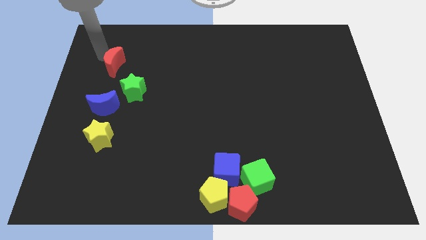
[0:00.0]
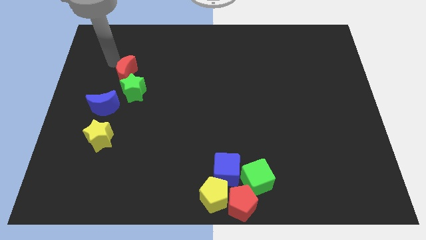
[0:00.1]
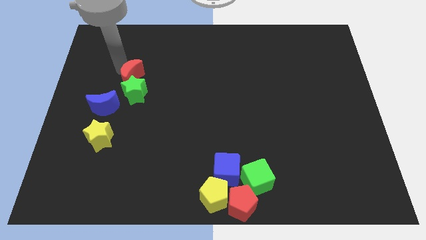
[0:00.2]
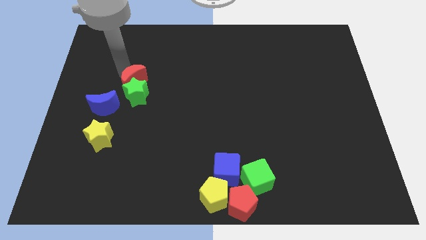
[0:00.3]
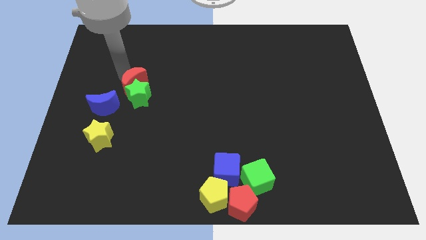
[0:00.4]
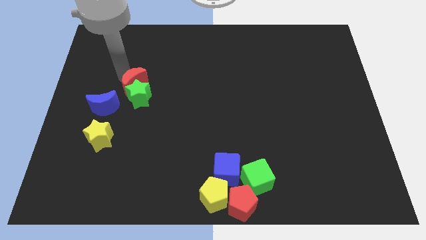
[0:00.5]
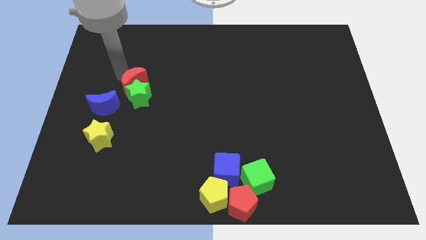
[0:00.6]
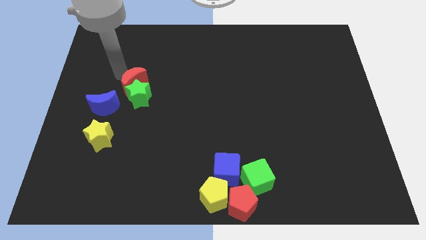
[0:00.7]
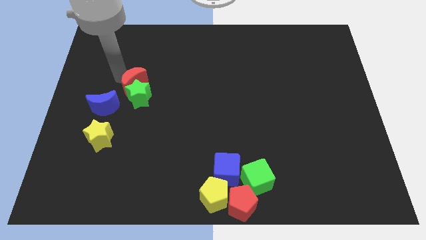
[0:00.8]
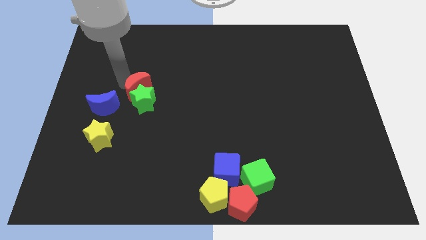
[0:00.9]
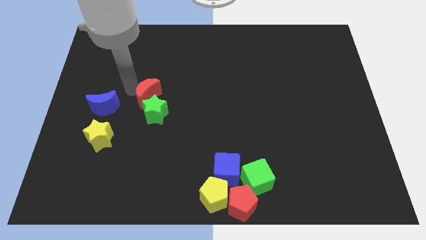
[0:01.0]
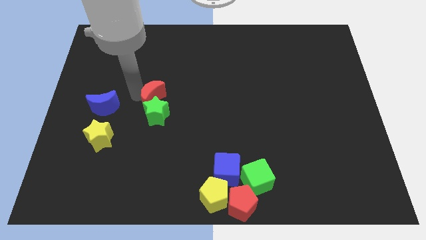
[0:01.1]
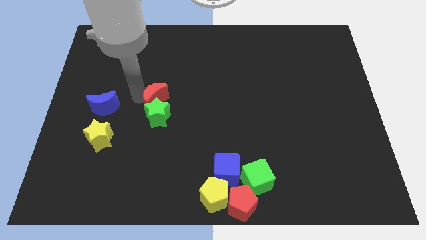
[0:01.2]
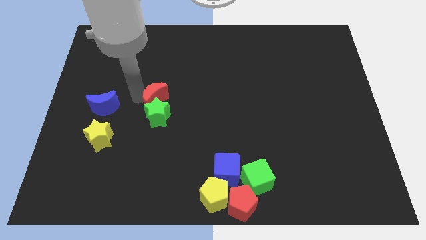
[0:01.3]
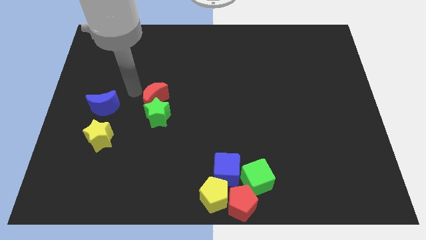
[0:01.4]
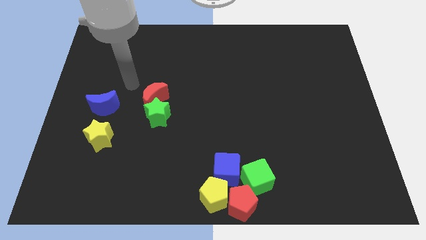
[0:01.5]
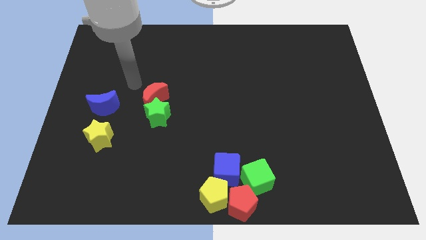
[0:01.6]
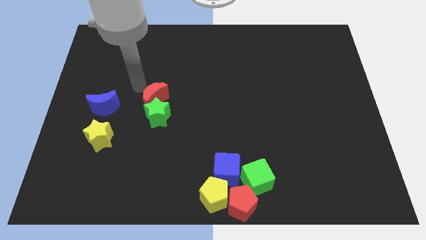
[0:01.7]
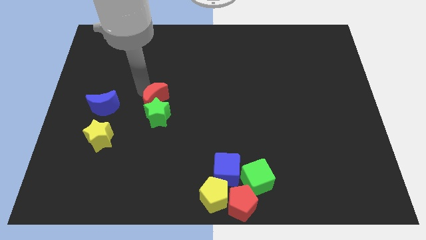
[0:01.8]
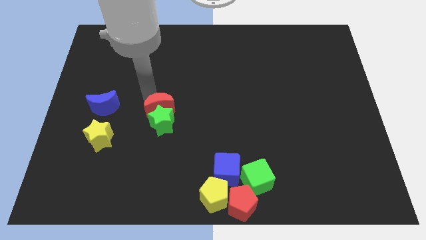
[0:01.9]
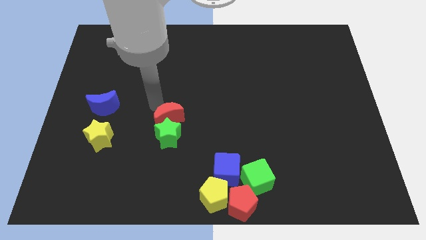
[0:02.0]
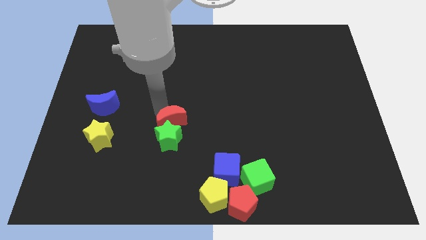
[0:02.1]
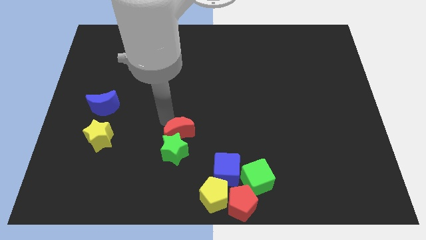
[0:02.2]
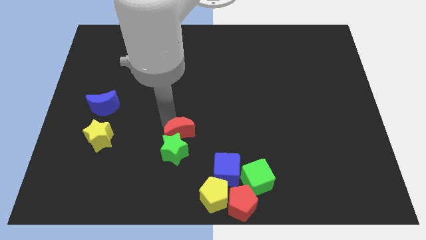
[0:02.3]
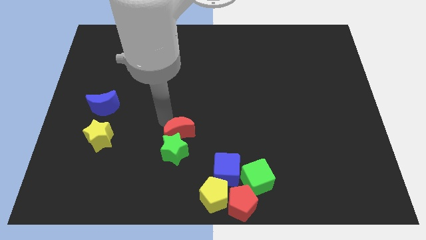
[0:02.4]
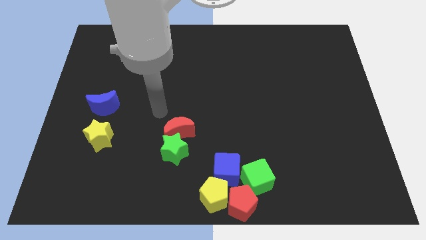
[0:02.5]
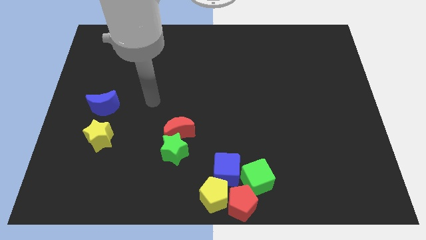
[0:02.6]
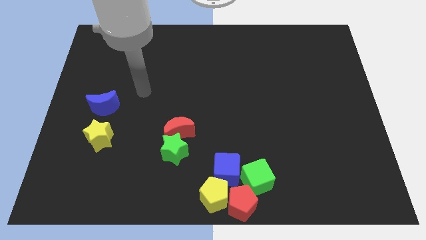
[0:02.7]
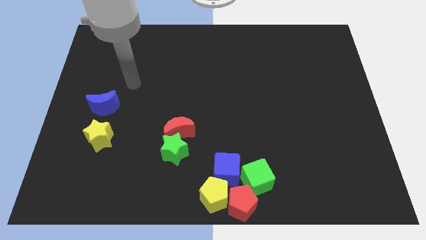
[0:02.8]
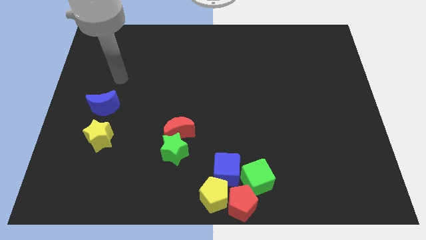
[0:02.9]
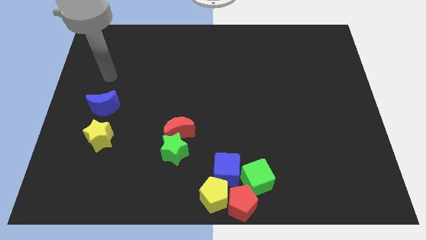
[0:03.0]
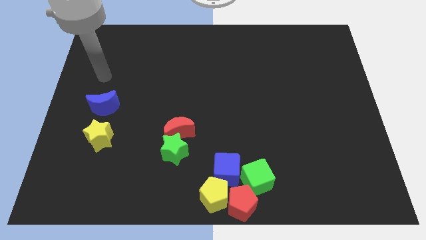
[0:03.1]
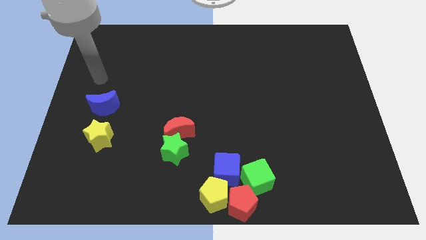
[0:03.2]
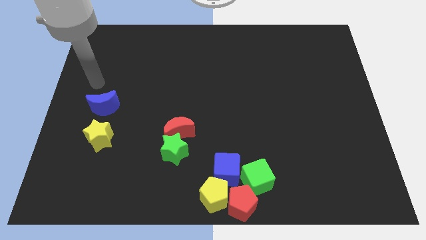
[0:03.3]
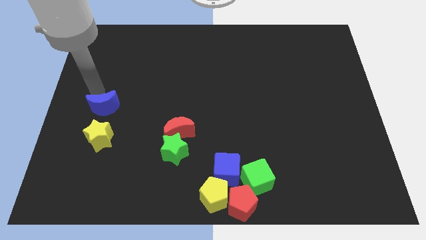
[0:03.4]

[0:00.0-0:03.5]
push red crescent and green star towards bottom

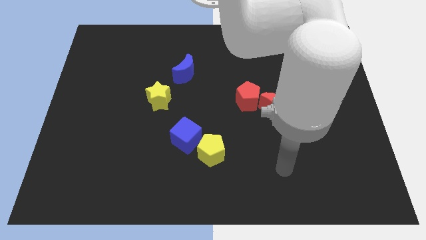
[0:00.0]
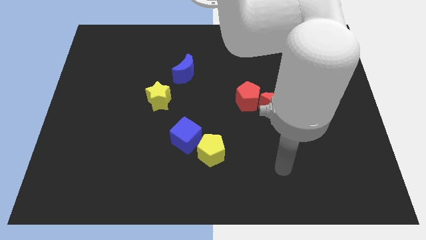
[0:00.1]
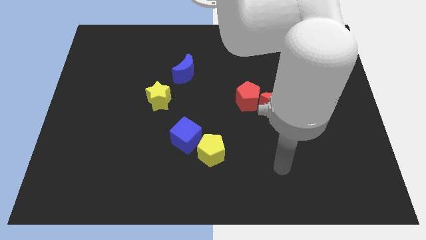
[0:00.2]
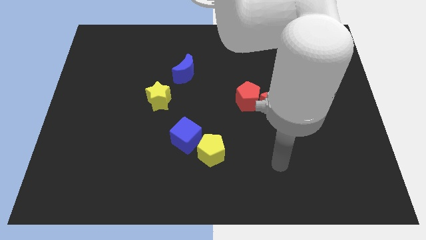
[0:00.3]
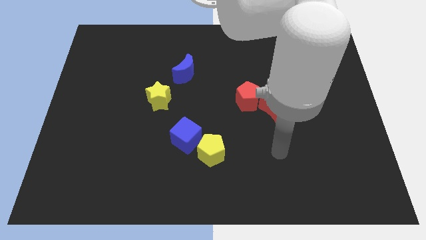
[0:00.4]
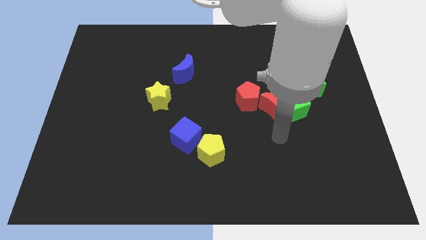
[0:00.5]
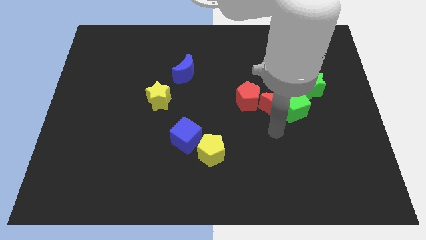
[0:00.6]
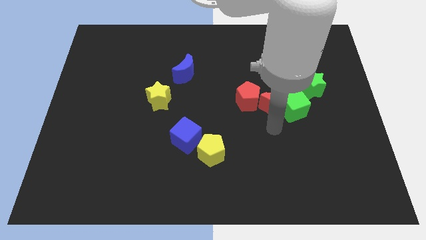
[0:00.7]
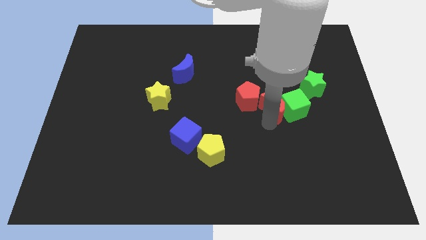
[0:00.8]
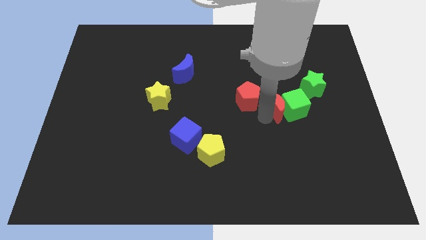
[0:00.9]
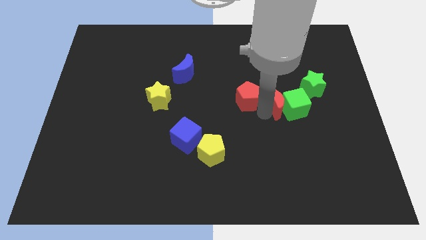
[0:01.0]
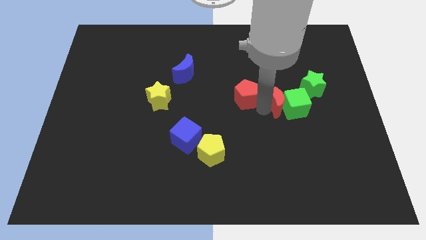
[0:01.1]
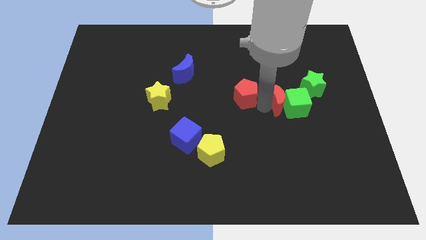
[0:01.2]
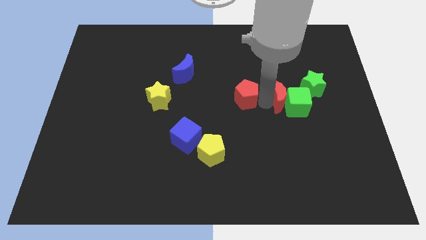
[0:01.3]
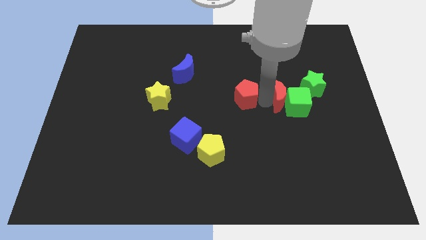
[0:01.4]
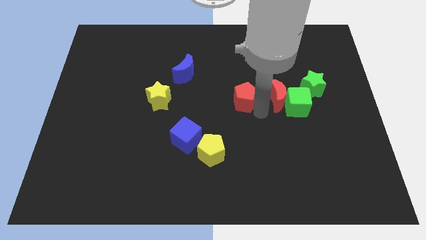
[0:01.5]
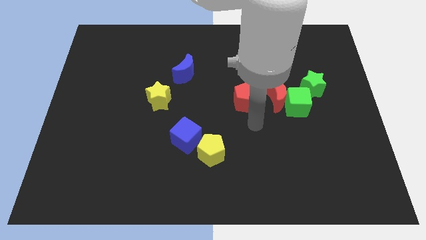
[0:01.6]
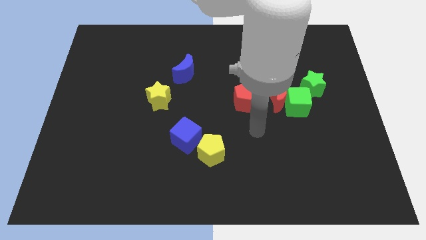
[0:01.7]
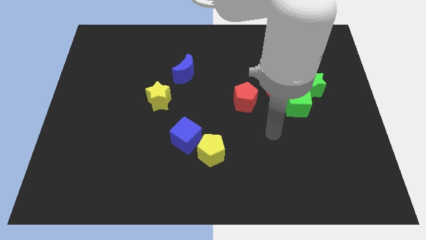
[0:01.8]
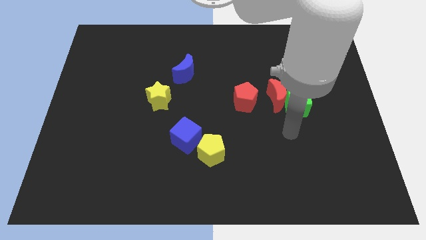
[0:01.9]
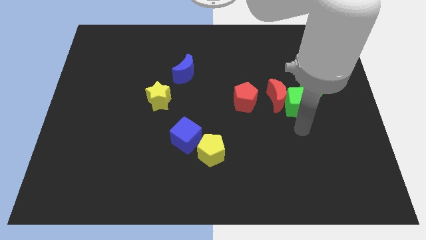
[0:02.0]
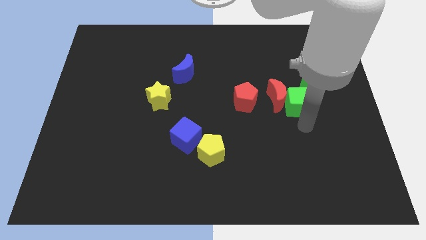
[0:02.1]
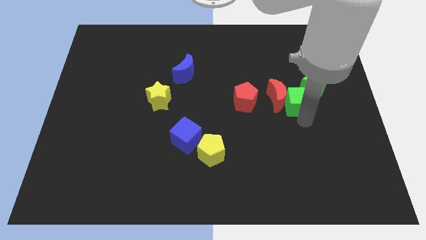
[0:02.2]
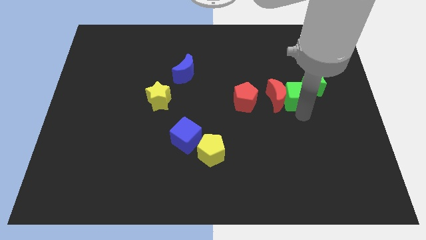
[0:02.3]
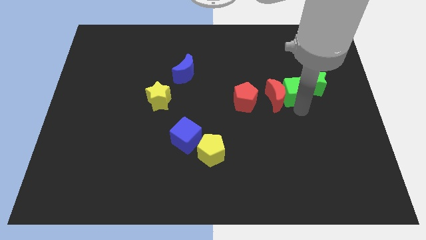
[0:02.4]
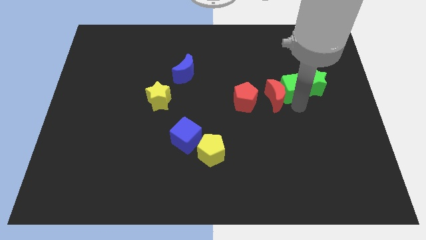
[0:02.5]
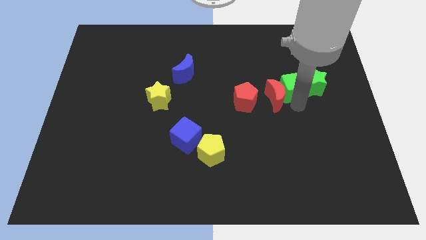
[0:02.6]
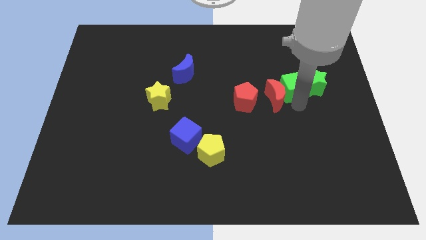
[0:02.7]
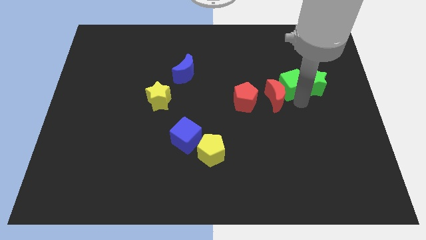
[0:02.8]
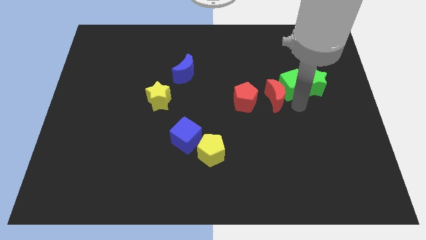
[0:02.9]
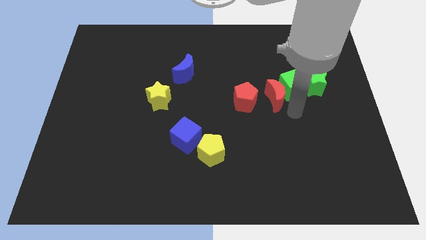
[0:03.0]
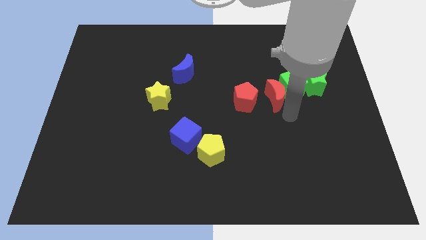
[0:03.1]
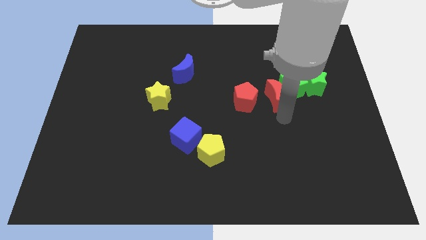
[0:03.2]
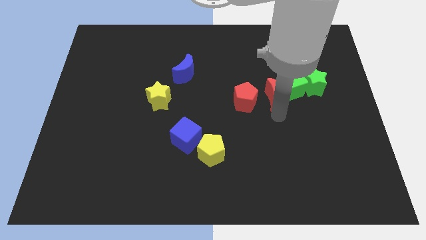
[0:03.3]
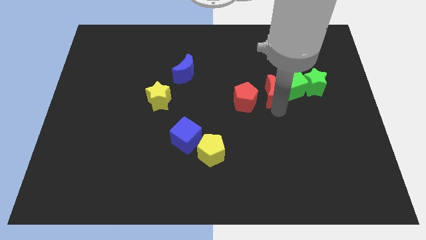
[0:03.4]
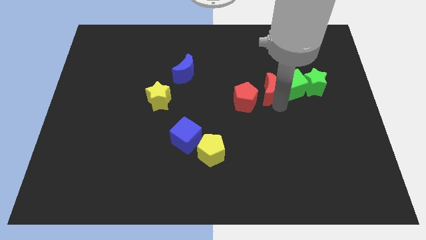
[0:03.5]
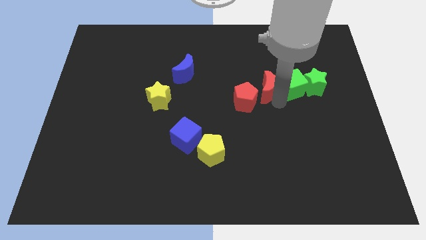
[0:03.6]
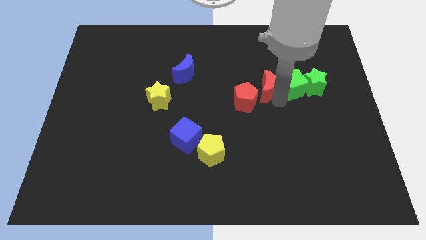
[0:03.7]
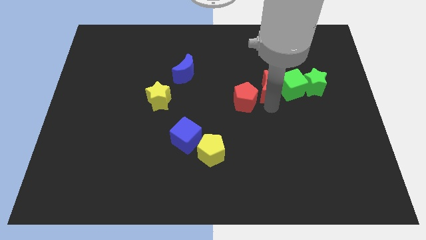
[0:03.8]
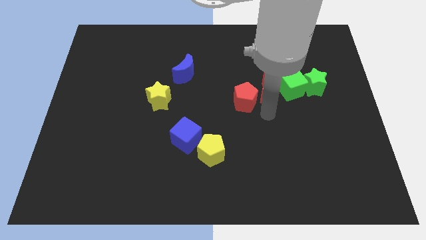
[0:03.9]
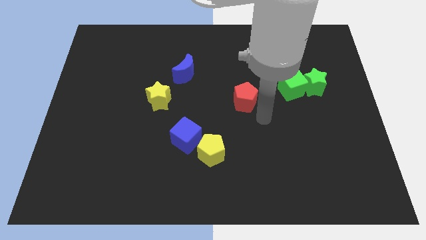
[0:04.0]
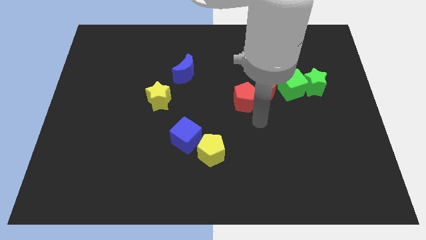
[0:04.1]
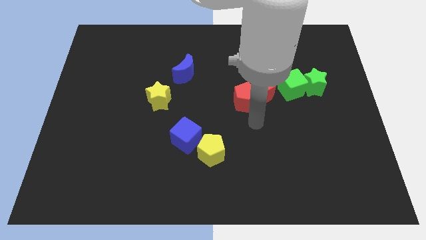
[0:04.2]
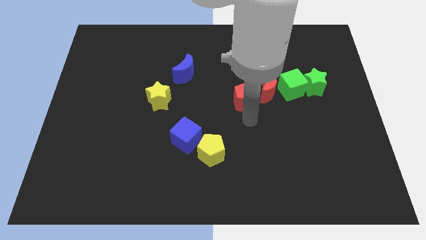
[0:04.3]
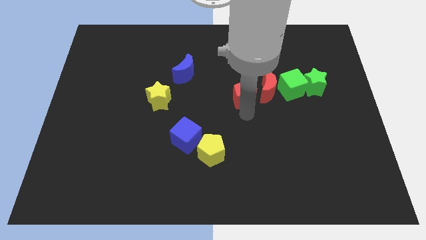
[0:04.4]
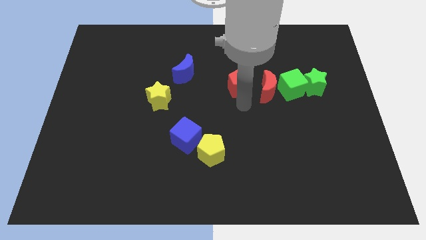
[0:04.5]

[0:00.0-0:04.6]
separate red pentagon and red moon

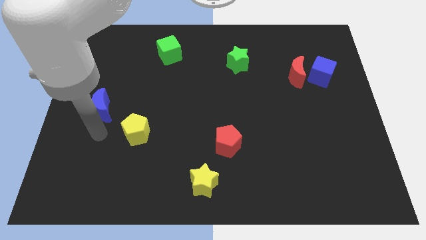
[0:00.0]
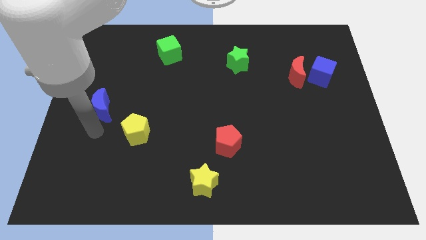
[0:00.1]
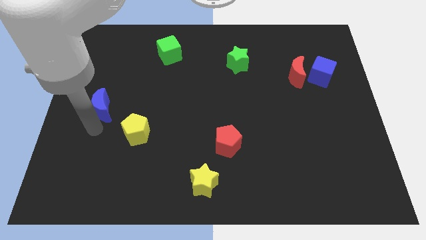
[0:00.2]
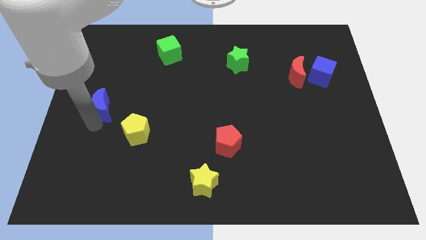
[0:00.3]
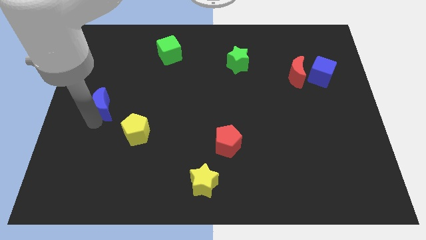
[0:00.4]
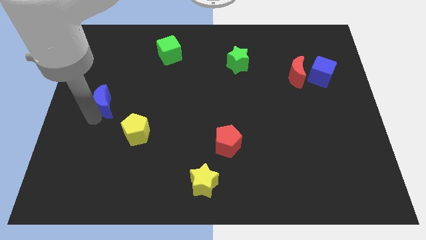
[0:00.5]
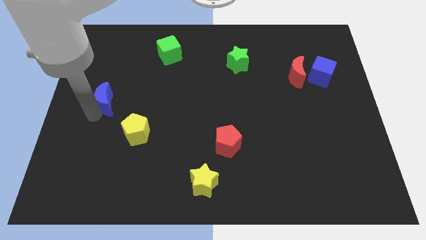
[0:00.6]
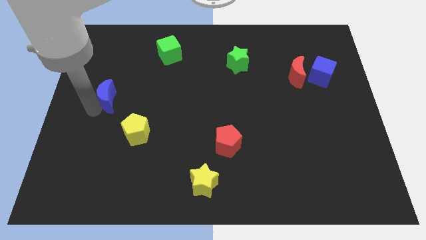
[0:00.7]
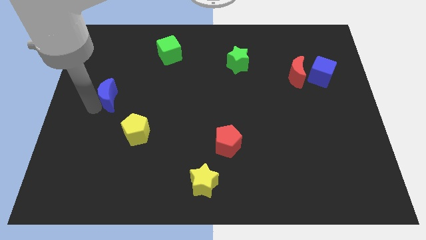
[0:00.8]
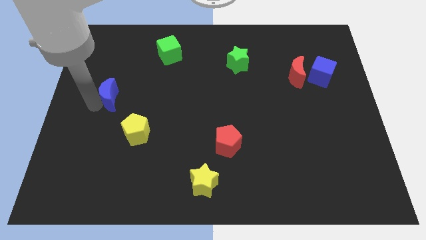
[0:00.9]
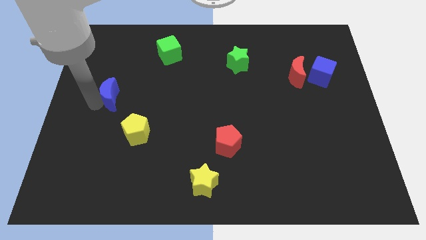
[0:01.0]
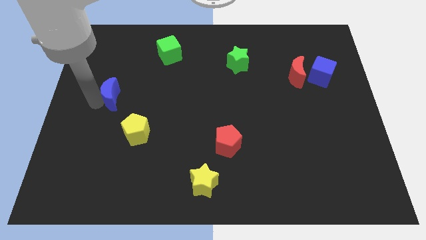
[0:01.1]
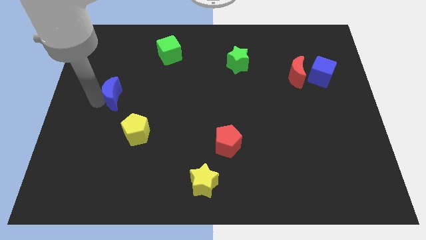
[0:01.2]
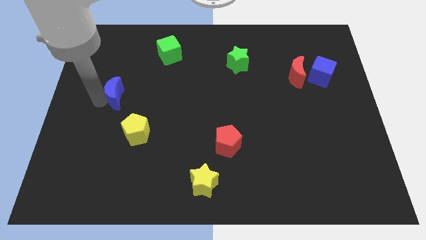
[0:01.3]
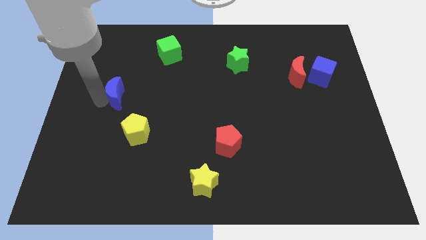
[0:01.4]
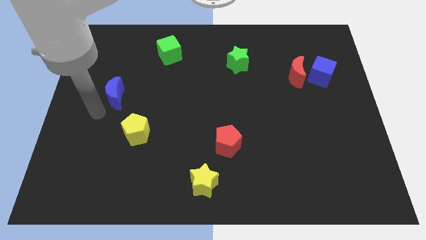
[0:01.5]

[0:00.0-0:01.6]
slightly push the blue crescent upwards of the board
